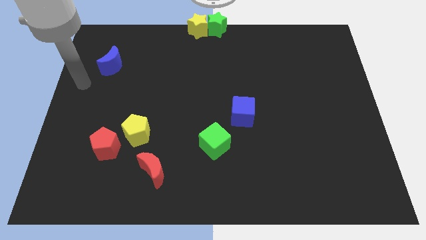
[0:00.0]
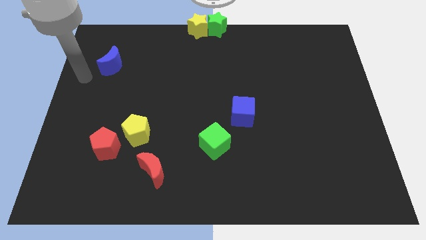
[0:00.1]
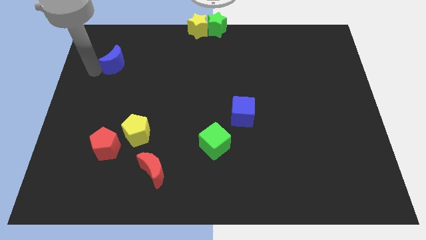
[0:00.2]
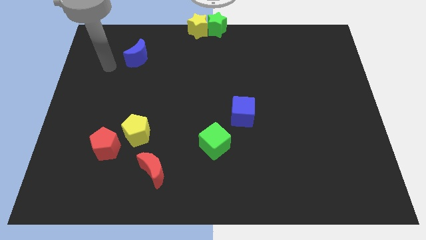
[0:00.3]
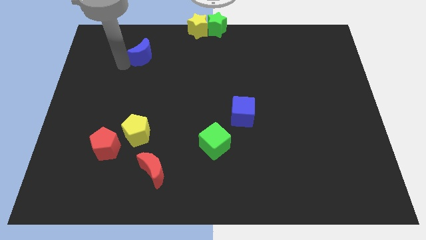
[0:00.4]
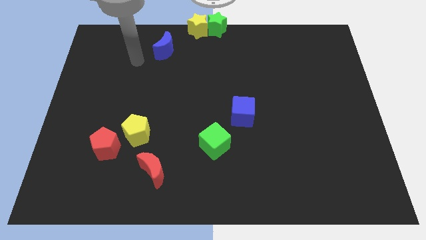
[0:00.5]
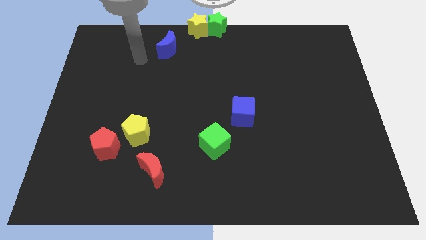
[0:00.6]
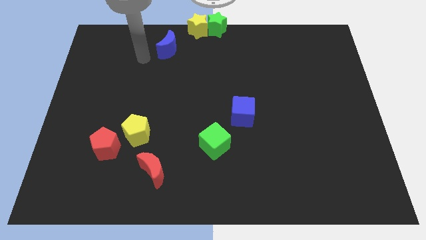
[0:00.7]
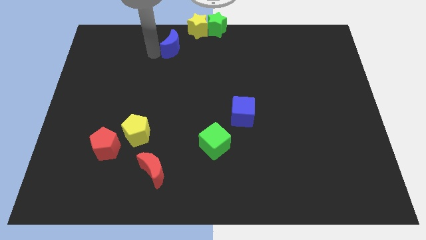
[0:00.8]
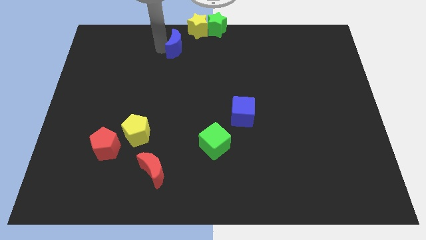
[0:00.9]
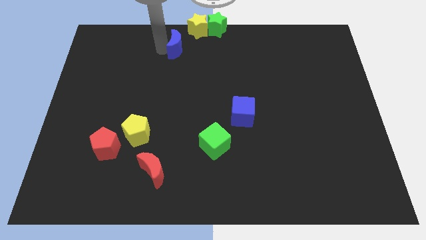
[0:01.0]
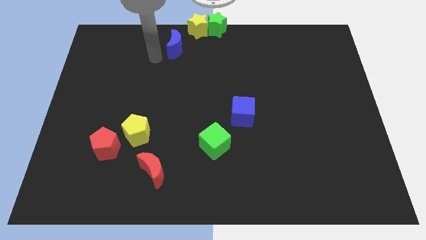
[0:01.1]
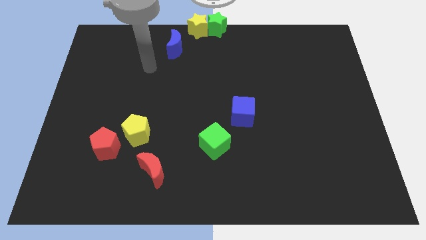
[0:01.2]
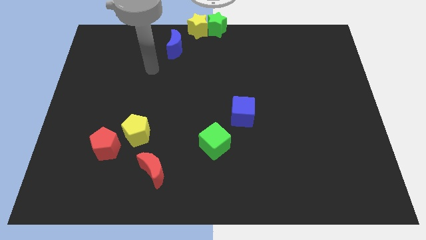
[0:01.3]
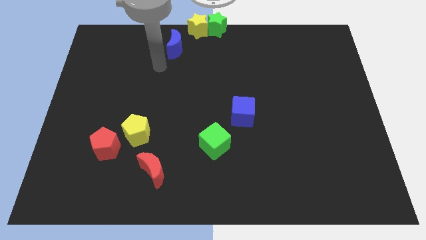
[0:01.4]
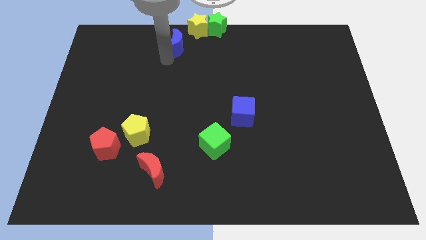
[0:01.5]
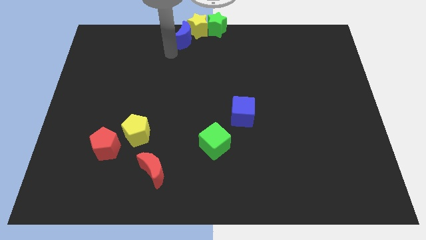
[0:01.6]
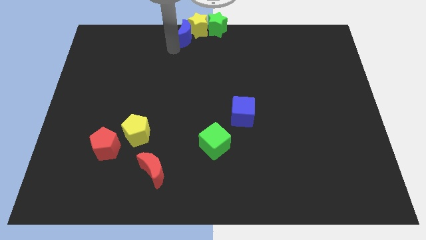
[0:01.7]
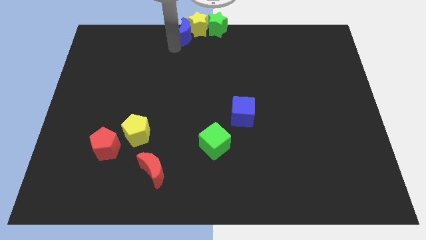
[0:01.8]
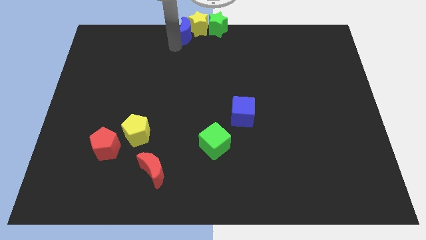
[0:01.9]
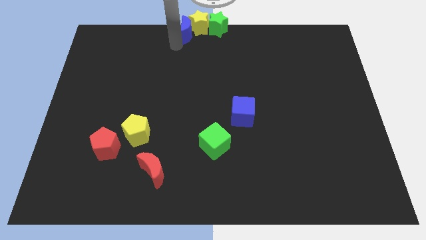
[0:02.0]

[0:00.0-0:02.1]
place the blue moon towards the left side of the yellow star

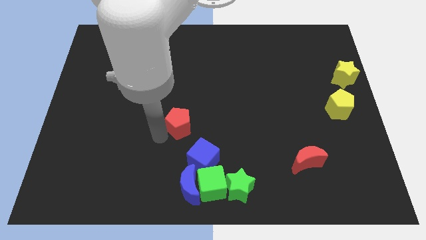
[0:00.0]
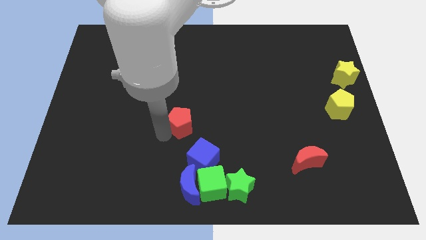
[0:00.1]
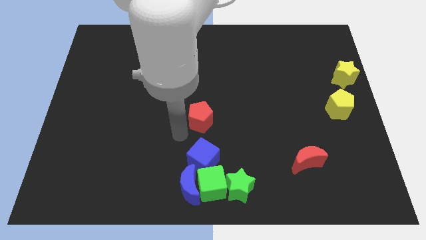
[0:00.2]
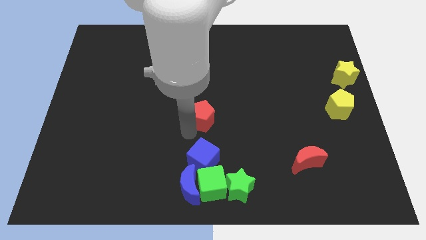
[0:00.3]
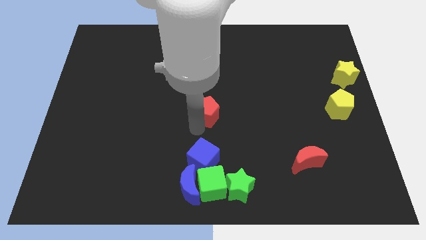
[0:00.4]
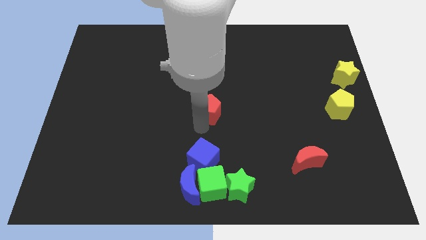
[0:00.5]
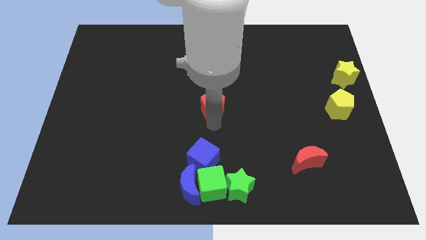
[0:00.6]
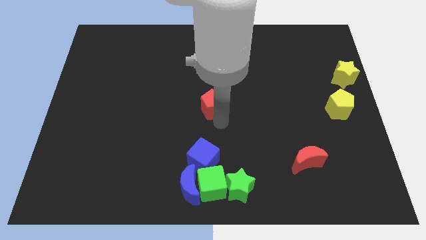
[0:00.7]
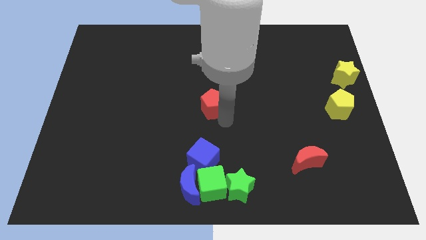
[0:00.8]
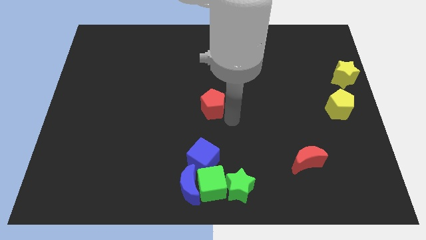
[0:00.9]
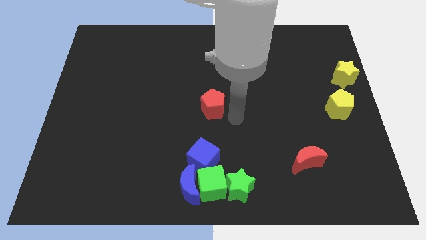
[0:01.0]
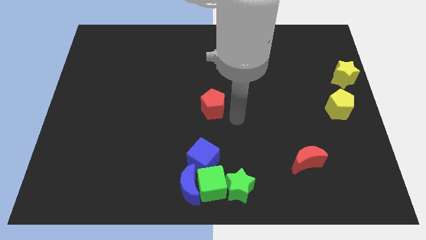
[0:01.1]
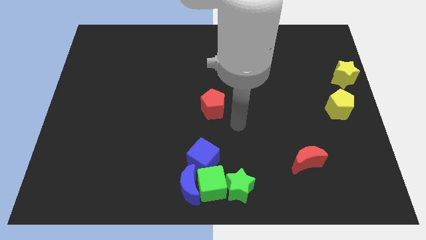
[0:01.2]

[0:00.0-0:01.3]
drag the red pentagon to the right

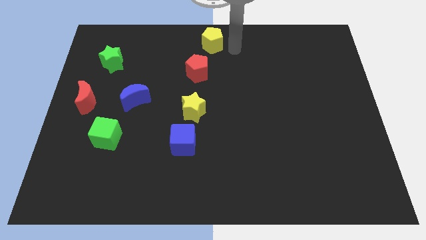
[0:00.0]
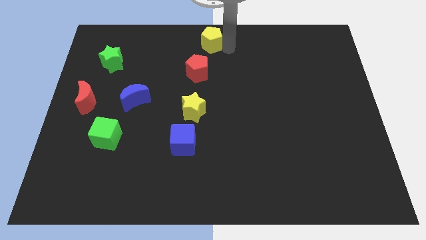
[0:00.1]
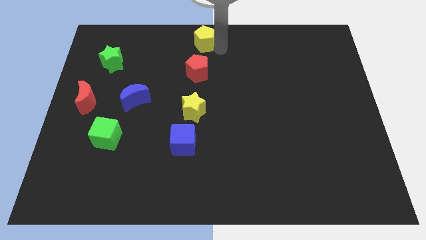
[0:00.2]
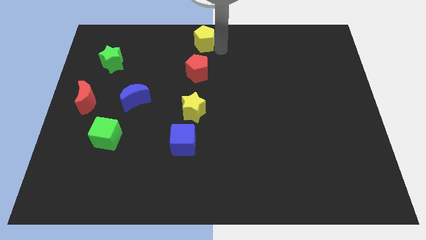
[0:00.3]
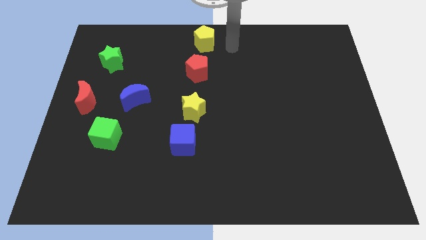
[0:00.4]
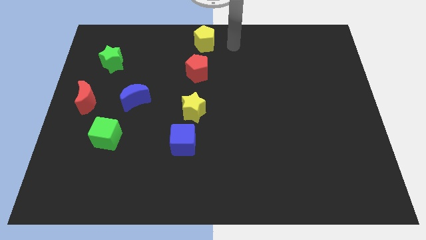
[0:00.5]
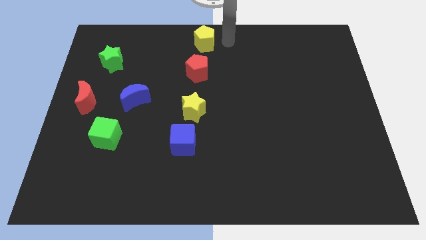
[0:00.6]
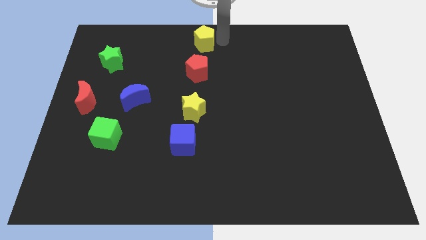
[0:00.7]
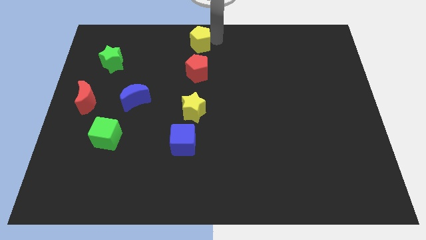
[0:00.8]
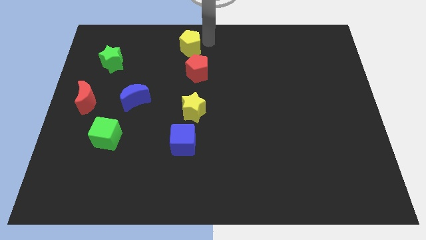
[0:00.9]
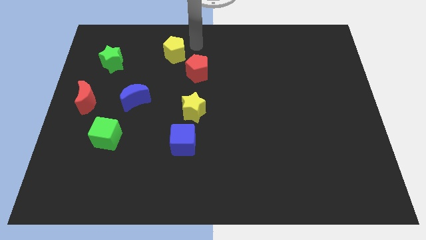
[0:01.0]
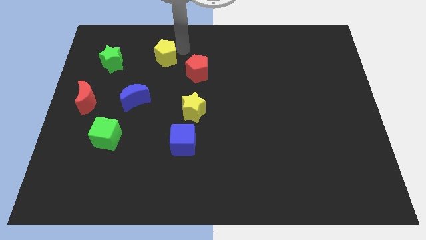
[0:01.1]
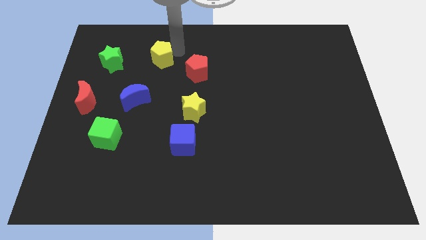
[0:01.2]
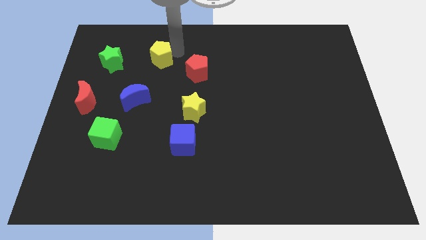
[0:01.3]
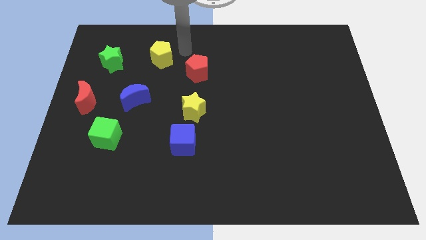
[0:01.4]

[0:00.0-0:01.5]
push the yellow pentagon diagonally on the top left side of the red pentagon

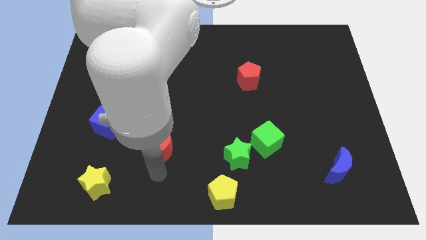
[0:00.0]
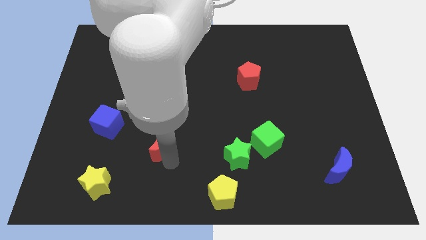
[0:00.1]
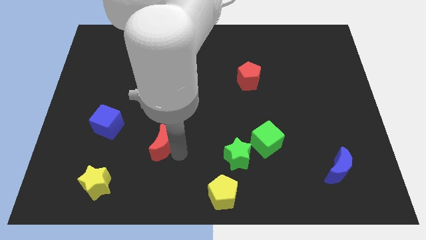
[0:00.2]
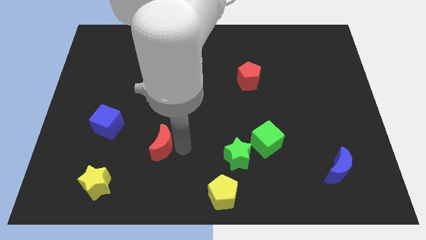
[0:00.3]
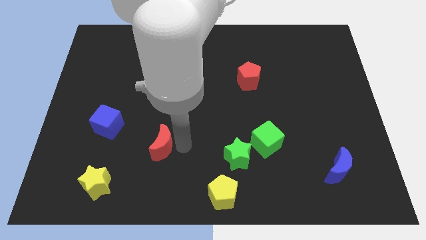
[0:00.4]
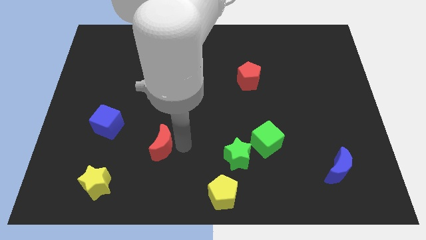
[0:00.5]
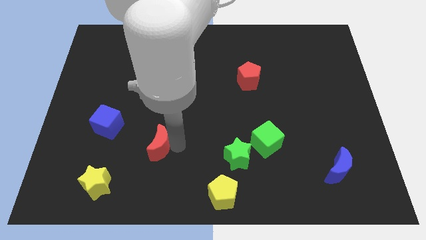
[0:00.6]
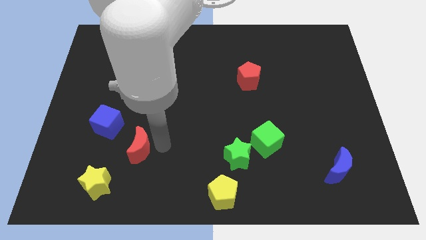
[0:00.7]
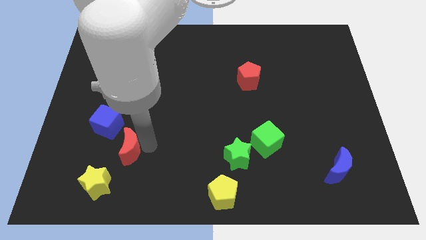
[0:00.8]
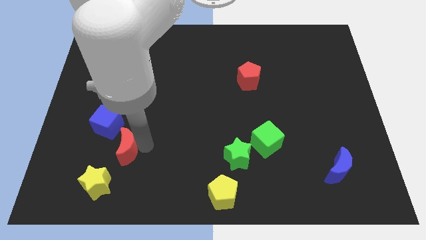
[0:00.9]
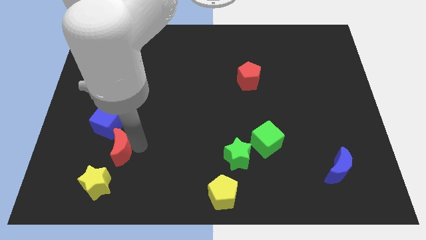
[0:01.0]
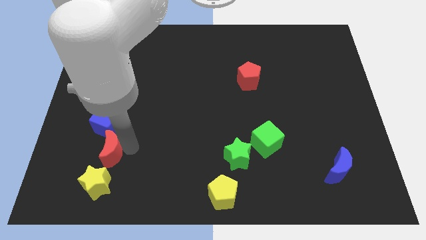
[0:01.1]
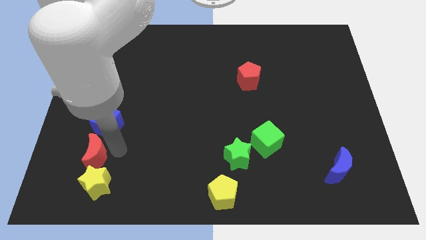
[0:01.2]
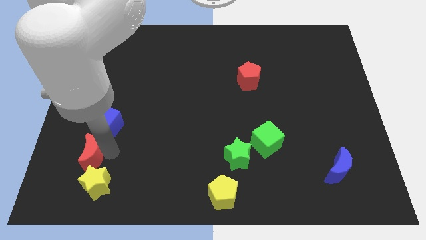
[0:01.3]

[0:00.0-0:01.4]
place red moon in between blue cube and yellow star

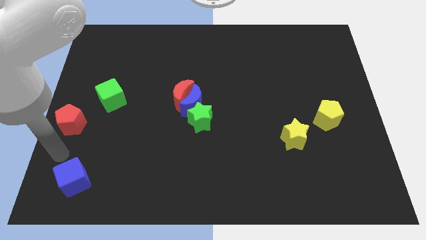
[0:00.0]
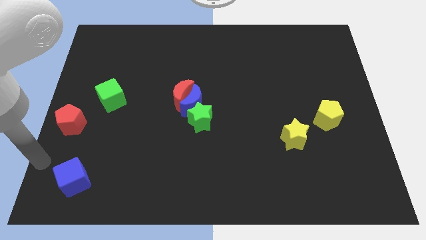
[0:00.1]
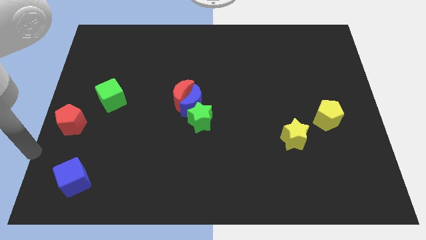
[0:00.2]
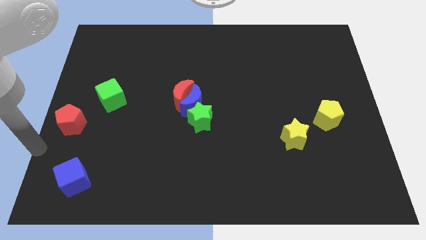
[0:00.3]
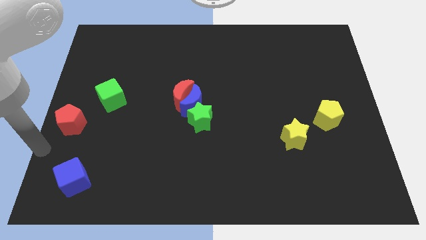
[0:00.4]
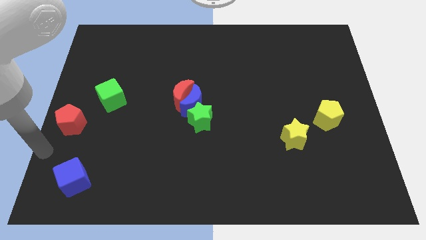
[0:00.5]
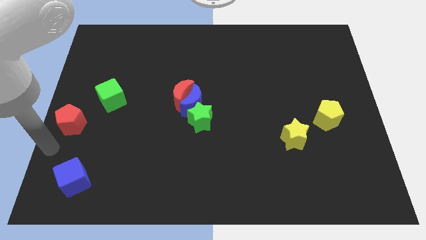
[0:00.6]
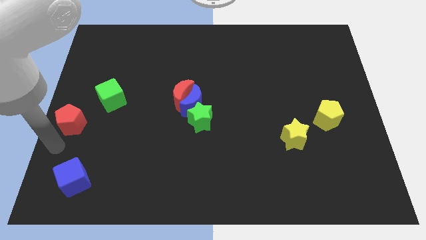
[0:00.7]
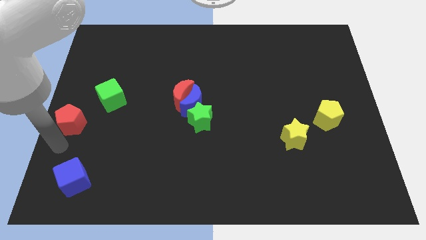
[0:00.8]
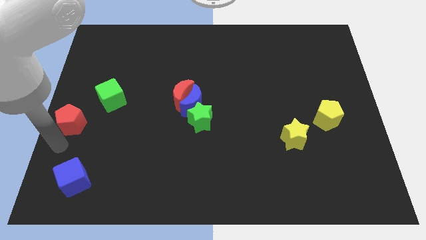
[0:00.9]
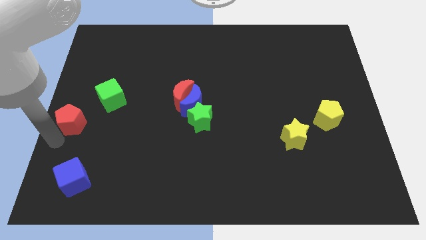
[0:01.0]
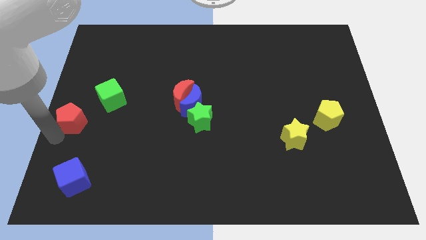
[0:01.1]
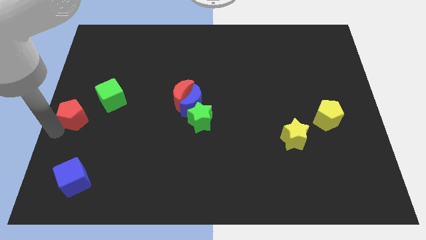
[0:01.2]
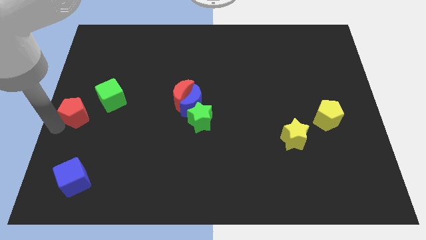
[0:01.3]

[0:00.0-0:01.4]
move the red pentagon towards the left center of the board

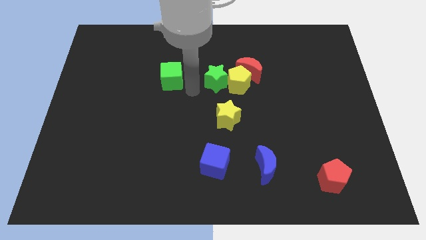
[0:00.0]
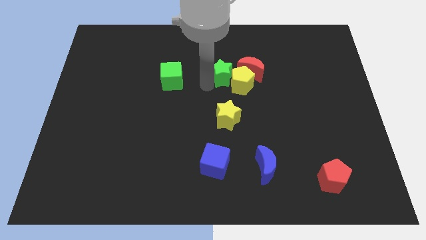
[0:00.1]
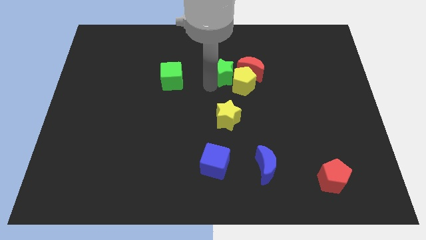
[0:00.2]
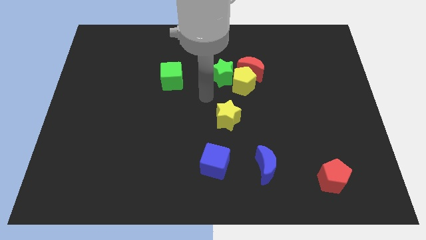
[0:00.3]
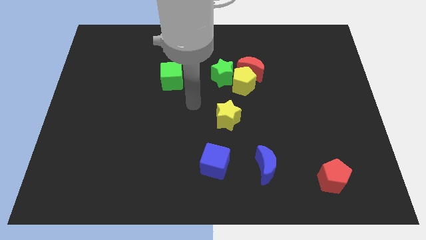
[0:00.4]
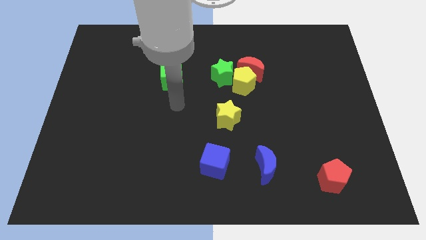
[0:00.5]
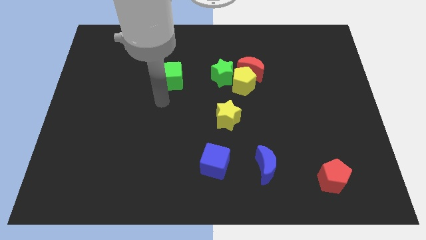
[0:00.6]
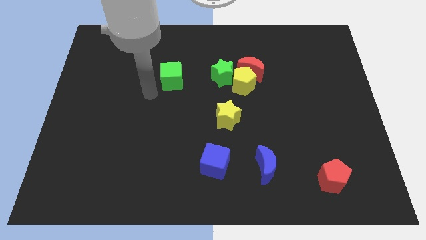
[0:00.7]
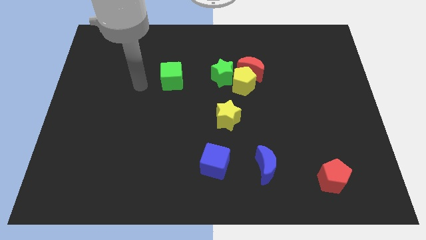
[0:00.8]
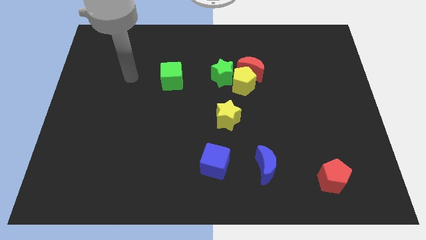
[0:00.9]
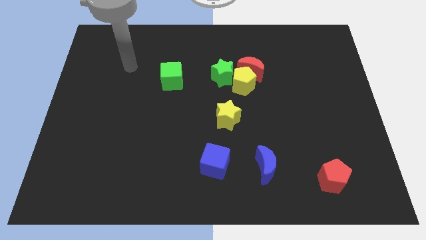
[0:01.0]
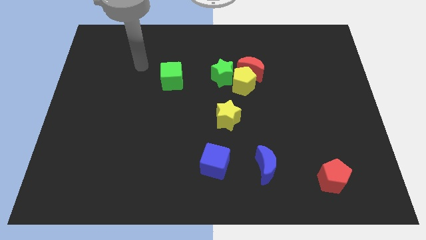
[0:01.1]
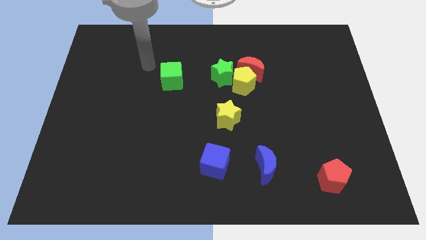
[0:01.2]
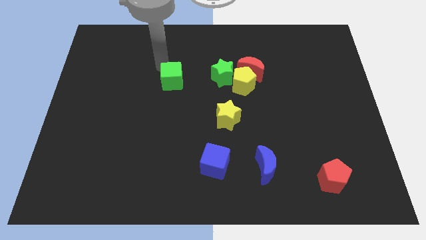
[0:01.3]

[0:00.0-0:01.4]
place the arm at the top of the green cube
